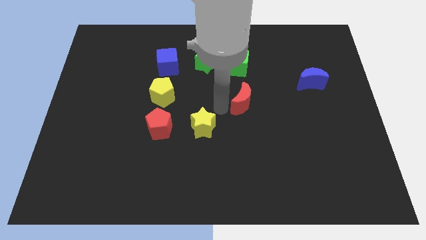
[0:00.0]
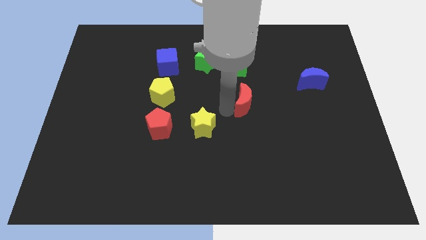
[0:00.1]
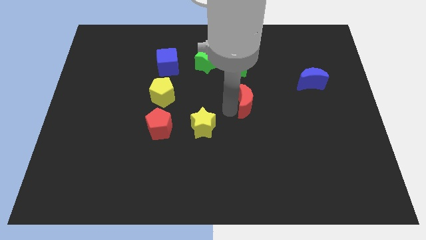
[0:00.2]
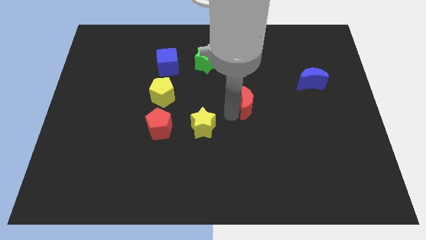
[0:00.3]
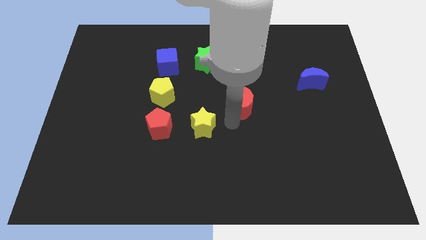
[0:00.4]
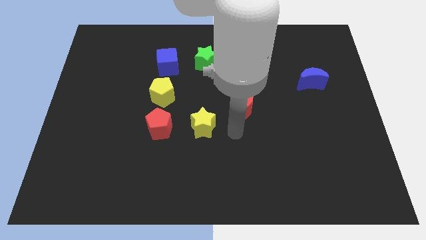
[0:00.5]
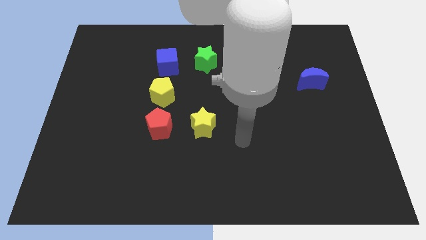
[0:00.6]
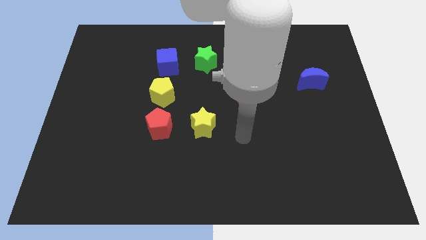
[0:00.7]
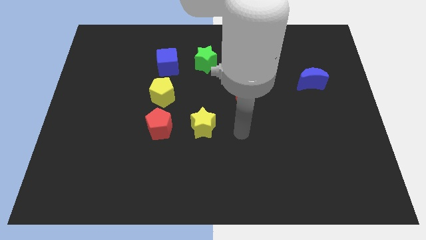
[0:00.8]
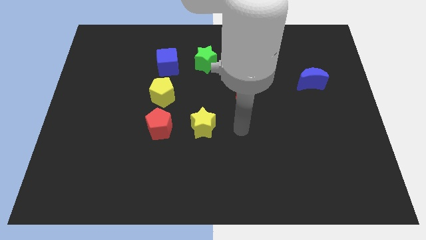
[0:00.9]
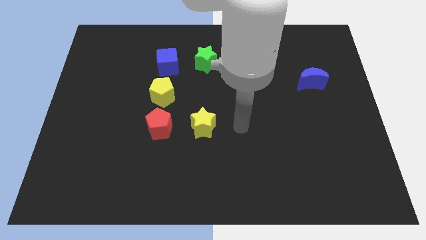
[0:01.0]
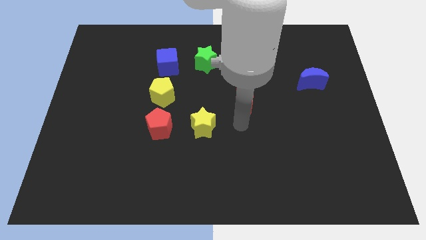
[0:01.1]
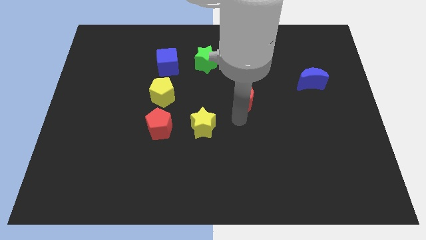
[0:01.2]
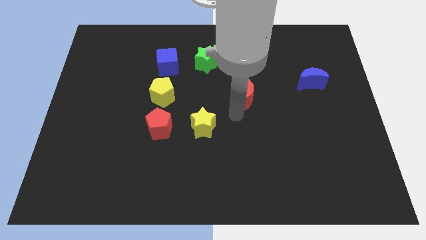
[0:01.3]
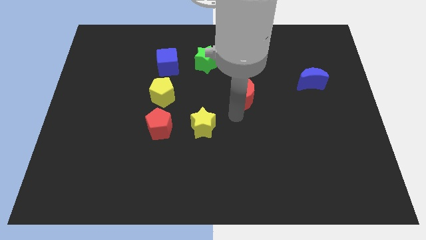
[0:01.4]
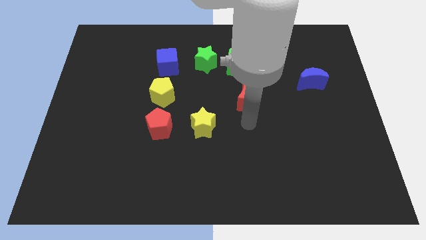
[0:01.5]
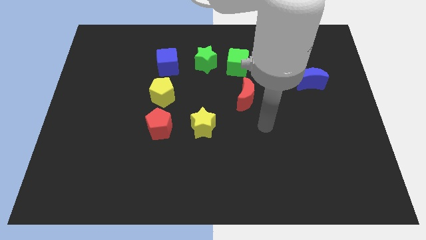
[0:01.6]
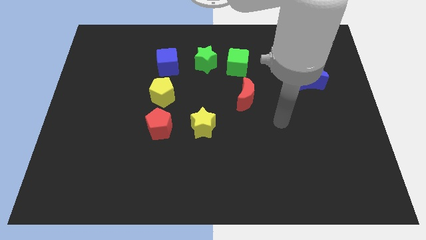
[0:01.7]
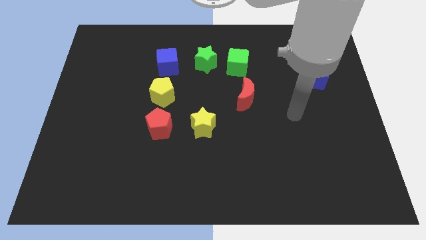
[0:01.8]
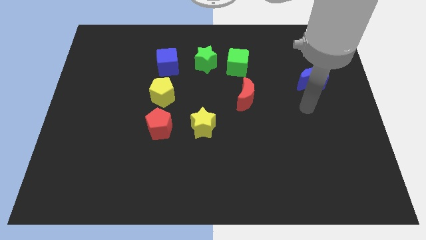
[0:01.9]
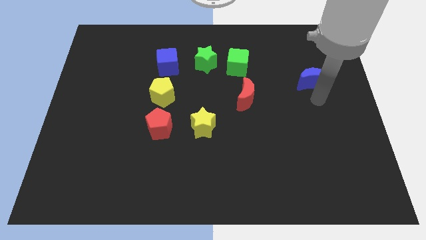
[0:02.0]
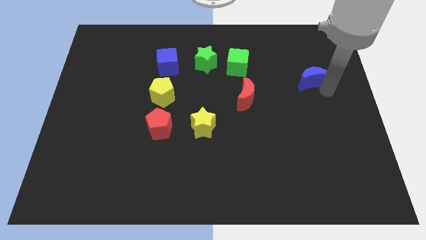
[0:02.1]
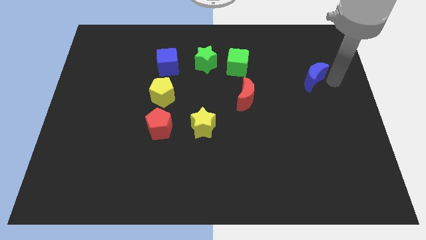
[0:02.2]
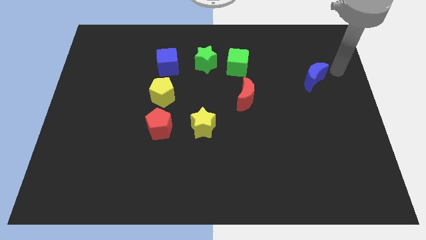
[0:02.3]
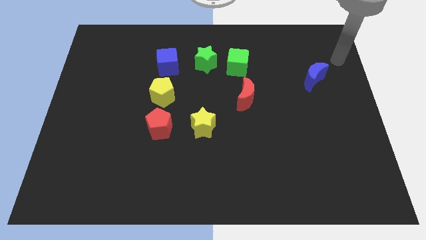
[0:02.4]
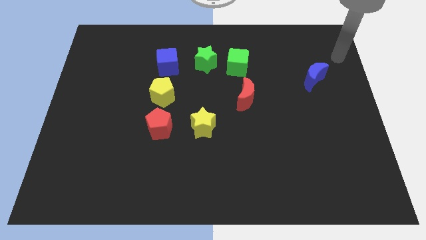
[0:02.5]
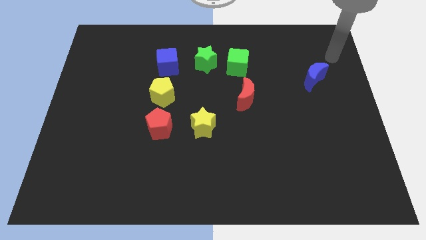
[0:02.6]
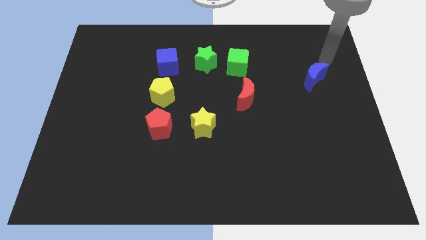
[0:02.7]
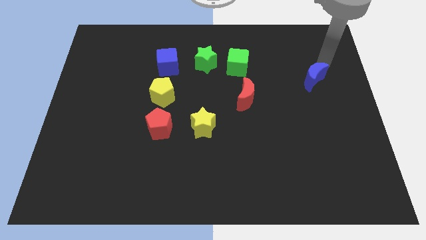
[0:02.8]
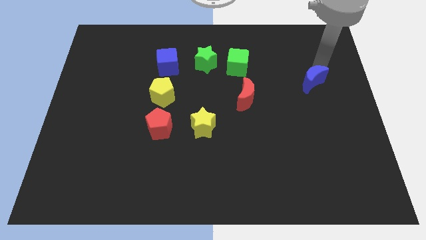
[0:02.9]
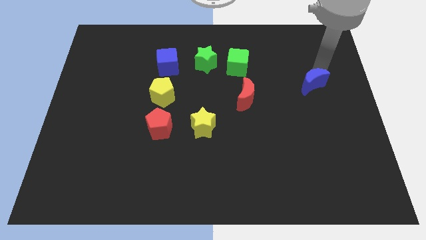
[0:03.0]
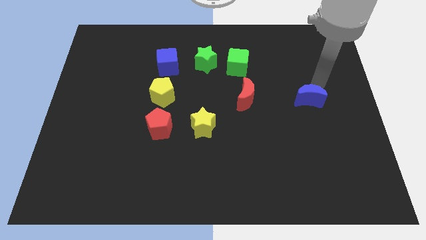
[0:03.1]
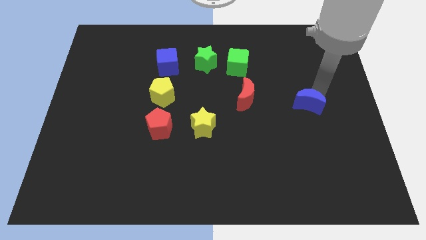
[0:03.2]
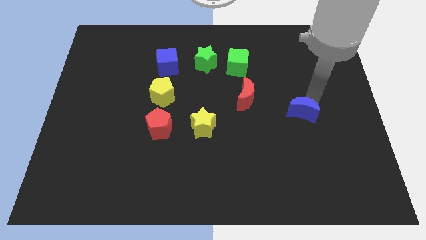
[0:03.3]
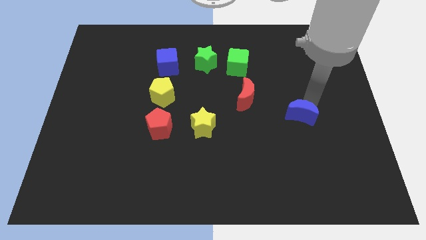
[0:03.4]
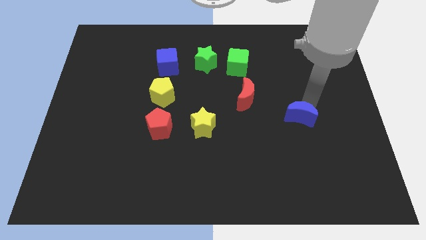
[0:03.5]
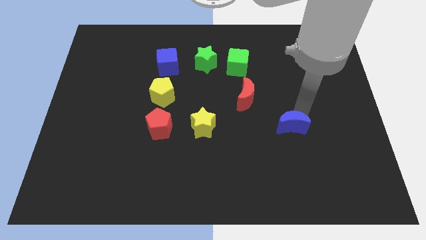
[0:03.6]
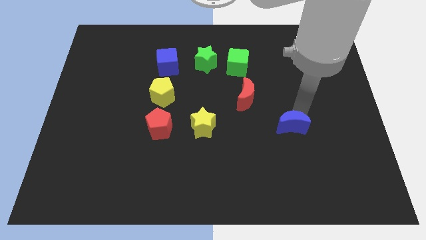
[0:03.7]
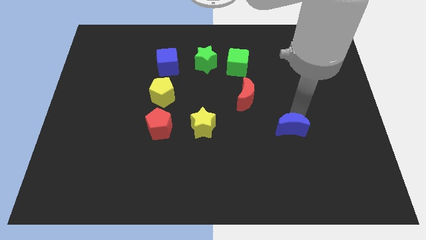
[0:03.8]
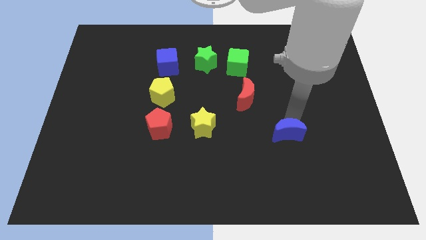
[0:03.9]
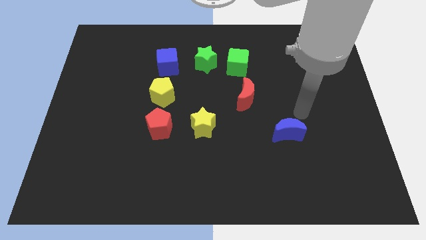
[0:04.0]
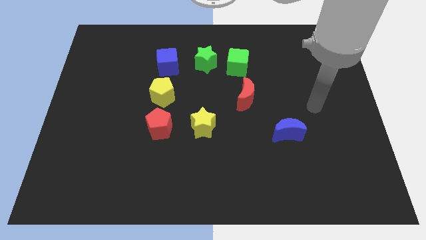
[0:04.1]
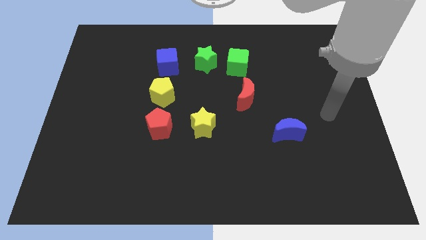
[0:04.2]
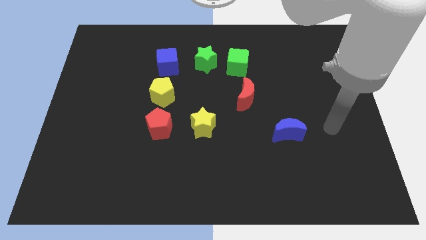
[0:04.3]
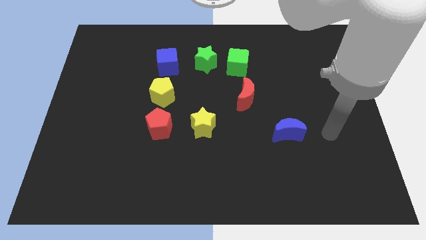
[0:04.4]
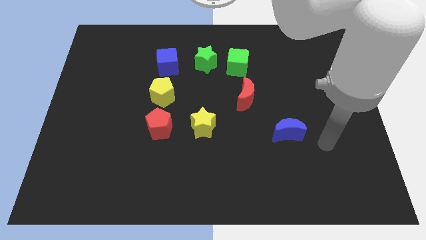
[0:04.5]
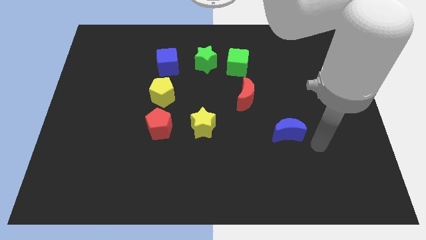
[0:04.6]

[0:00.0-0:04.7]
move the red crescent slightly towards the green block

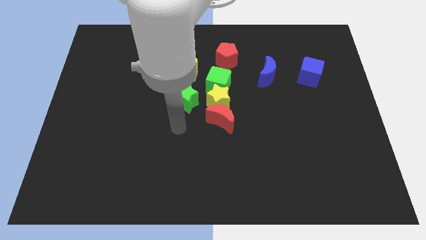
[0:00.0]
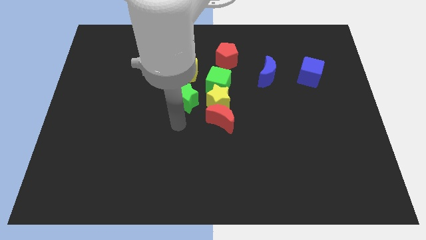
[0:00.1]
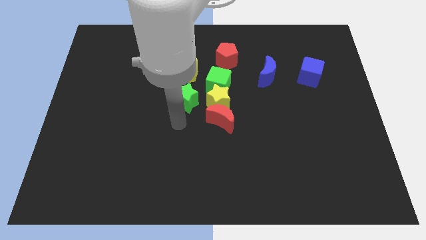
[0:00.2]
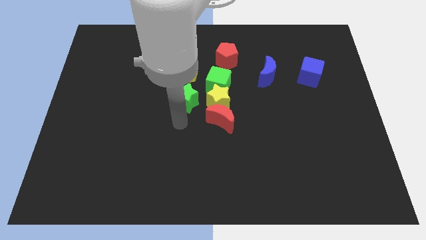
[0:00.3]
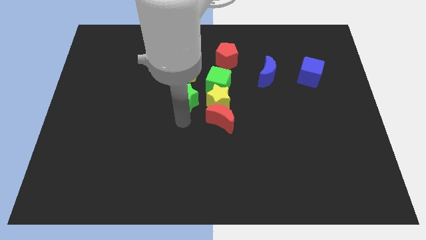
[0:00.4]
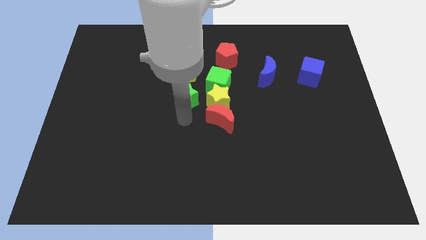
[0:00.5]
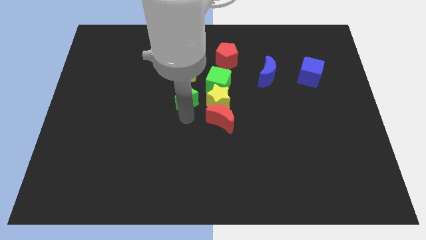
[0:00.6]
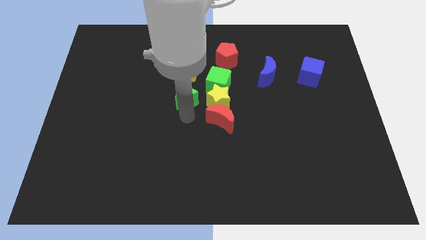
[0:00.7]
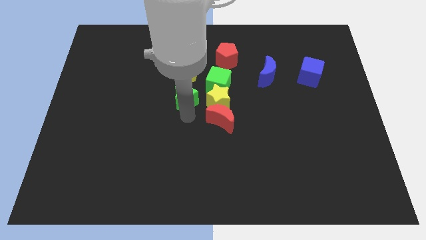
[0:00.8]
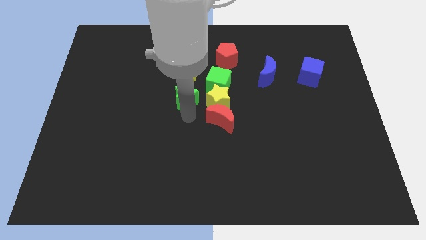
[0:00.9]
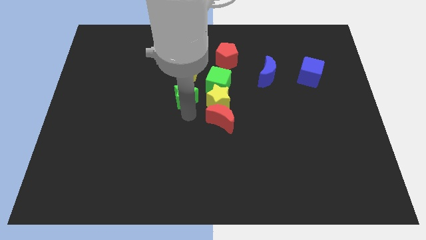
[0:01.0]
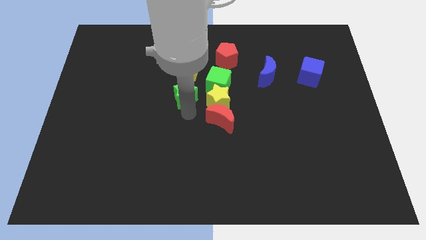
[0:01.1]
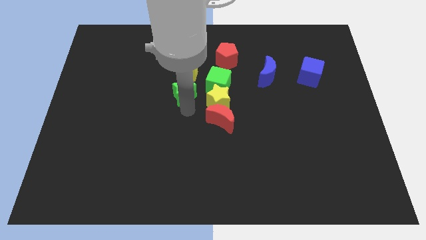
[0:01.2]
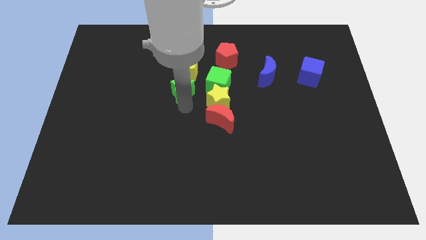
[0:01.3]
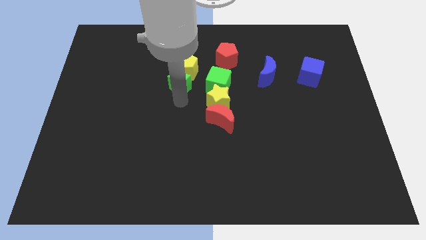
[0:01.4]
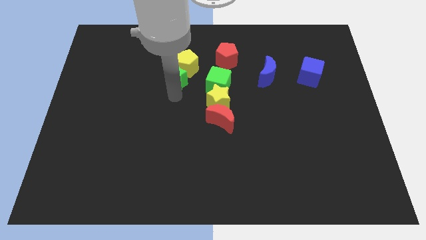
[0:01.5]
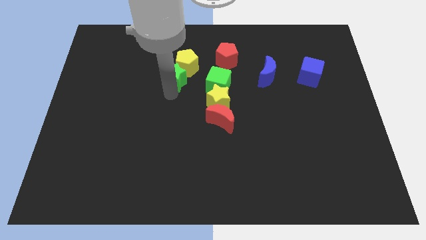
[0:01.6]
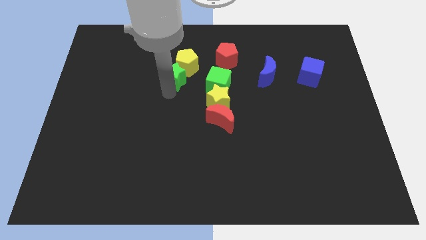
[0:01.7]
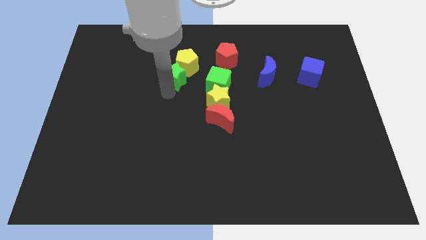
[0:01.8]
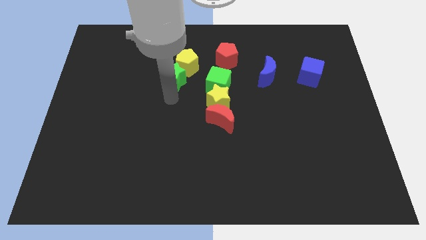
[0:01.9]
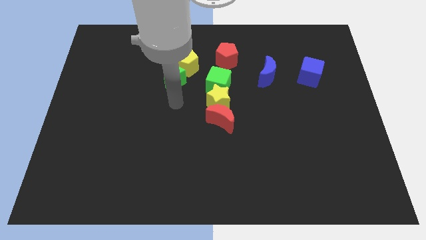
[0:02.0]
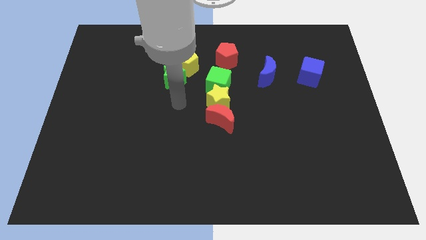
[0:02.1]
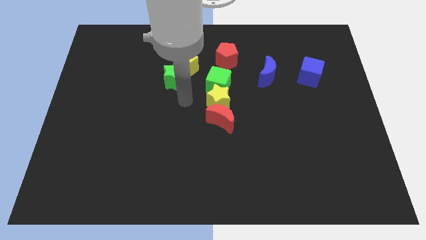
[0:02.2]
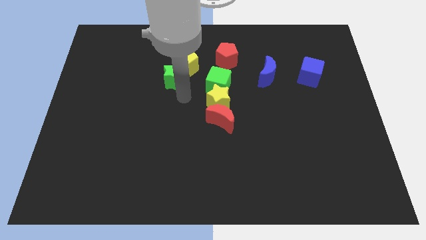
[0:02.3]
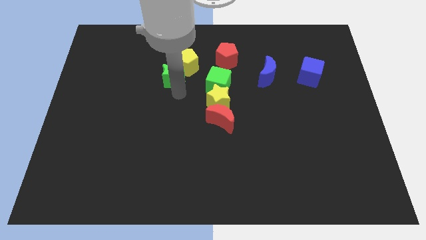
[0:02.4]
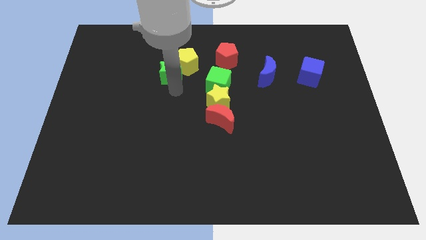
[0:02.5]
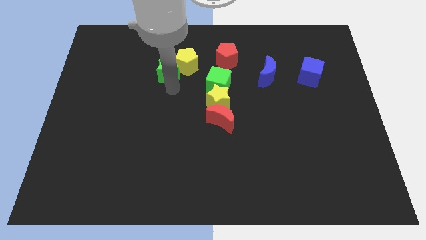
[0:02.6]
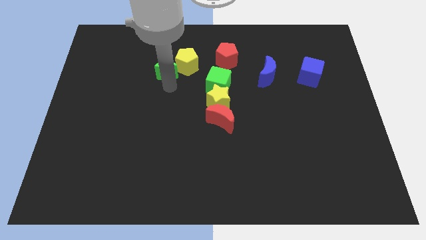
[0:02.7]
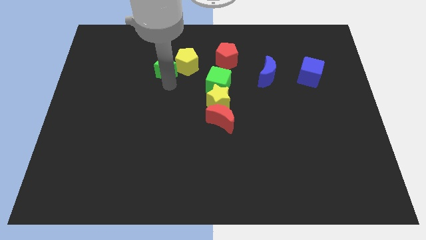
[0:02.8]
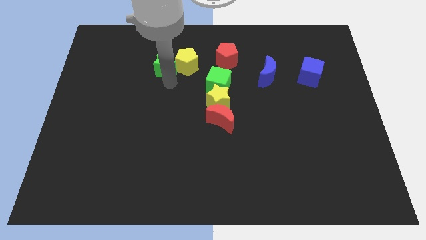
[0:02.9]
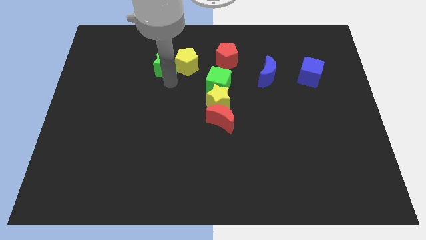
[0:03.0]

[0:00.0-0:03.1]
push green star into yellow pentagon

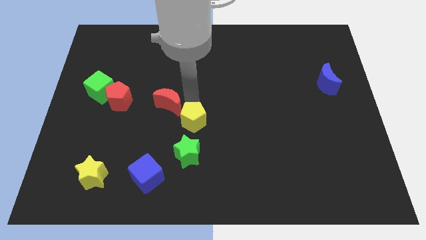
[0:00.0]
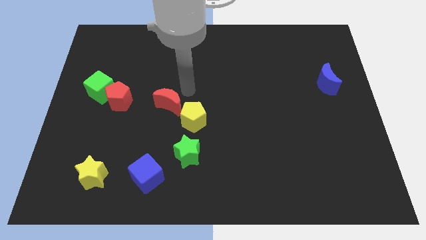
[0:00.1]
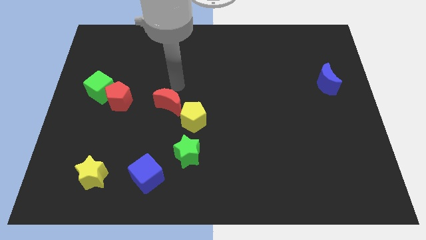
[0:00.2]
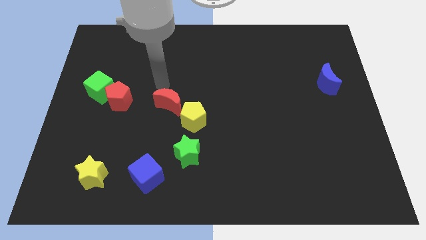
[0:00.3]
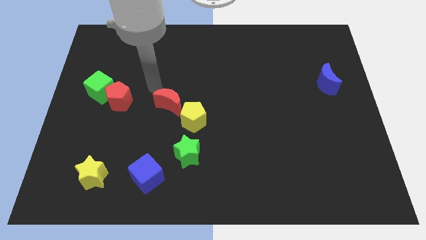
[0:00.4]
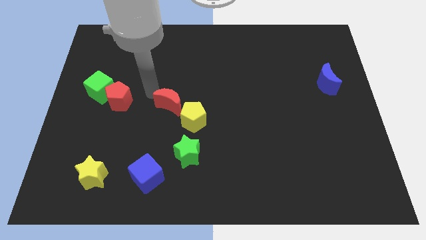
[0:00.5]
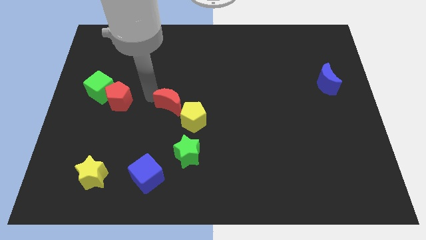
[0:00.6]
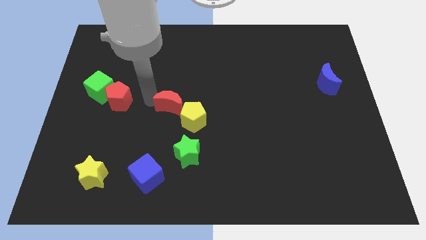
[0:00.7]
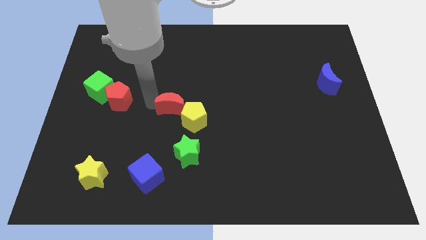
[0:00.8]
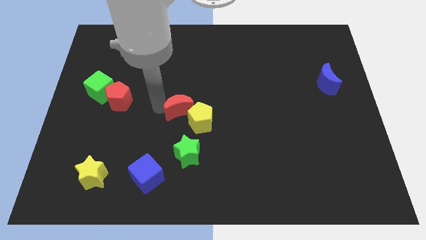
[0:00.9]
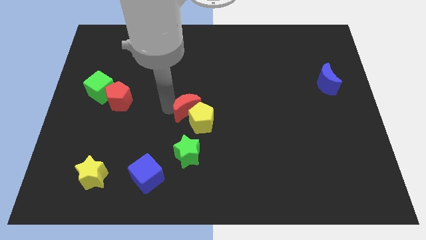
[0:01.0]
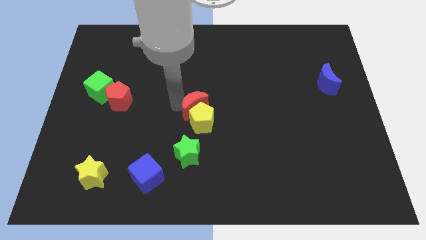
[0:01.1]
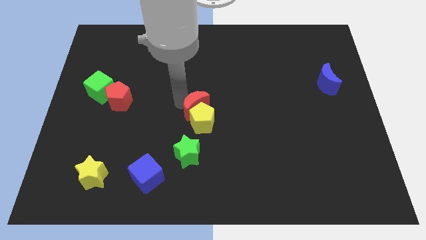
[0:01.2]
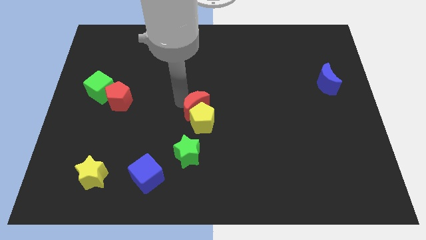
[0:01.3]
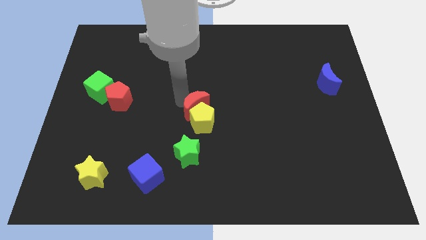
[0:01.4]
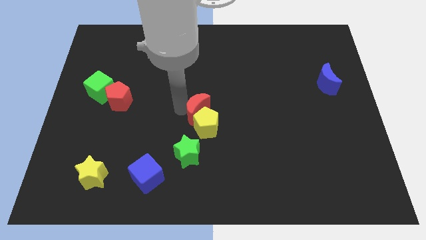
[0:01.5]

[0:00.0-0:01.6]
push the red crescent into the yellow pentagon
